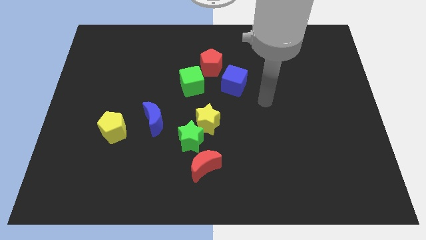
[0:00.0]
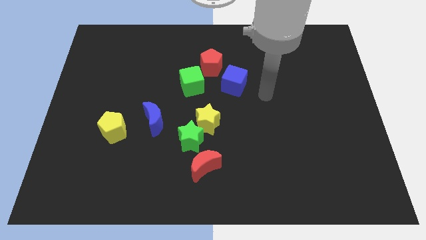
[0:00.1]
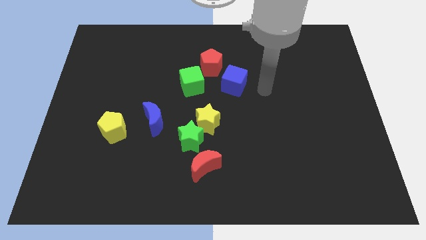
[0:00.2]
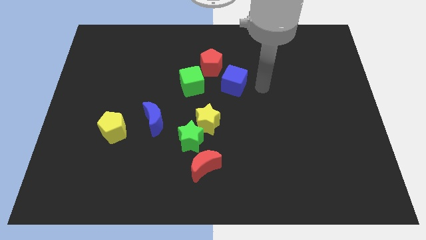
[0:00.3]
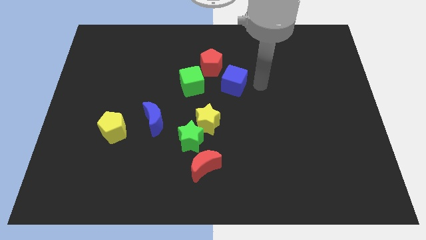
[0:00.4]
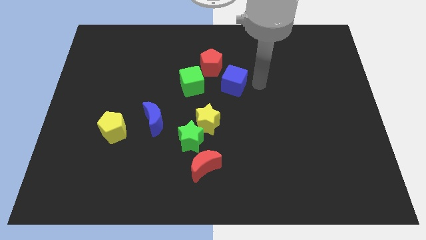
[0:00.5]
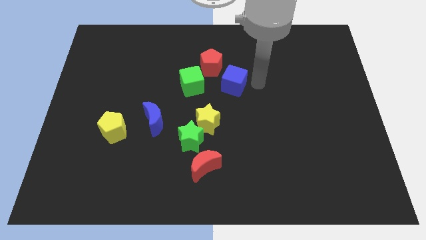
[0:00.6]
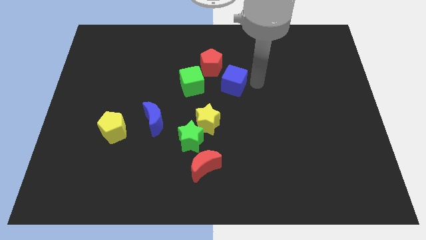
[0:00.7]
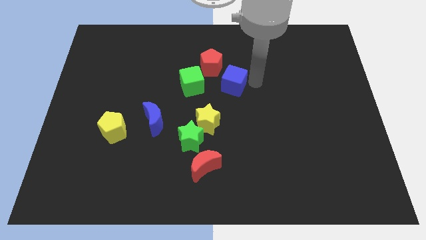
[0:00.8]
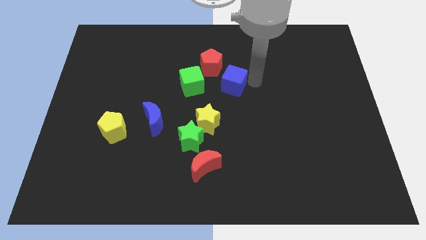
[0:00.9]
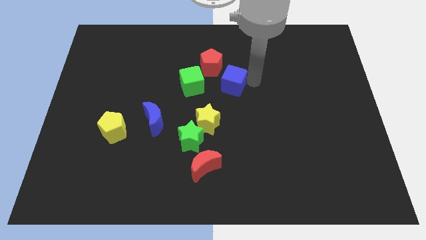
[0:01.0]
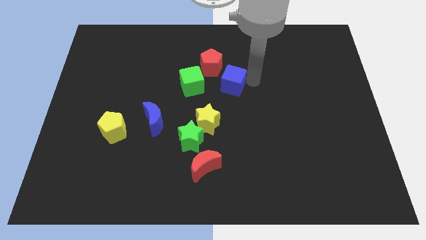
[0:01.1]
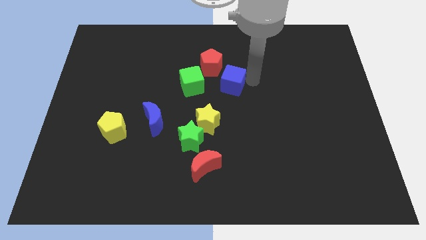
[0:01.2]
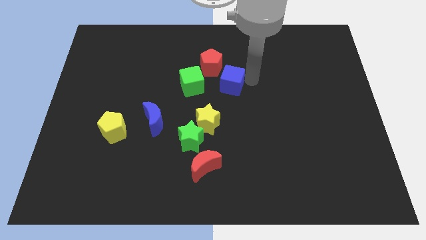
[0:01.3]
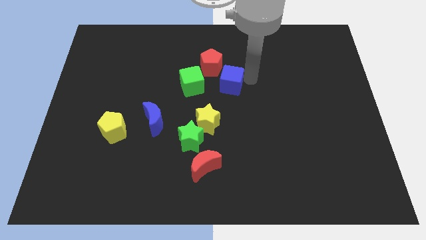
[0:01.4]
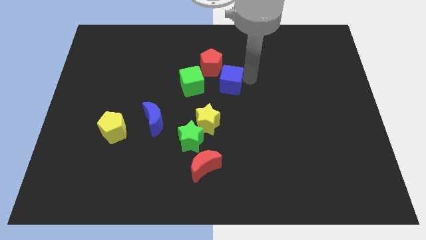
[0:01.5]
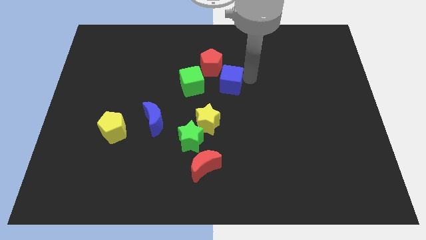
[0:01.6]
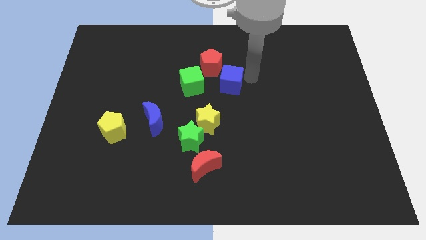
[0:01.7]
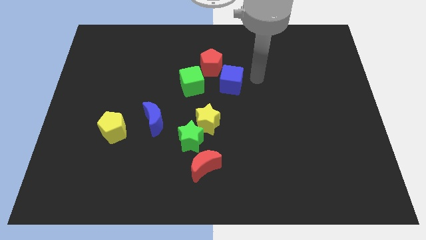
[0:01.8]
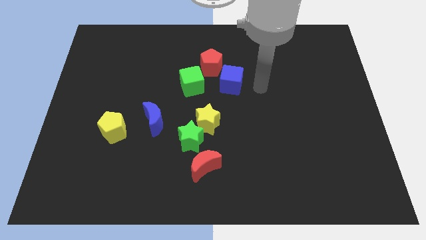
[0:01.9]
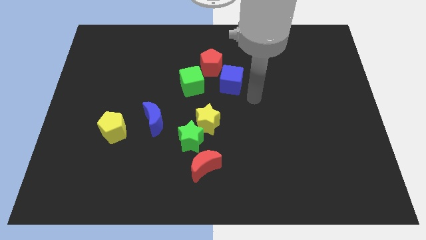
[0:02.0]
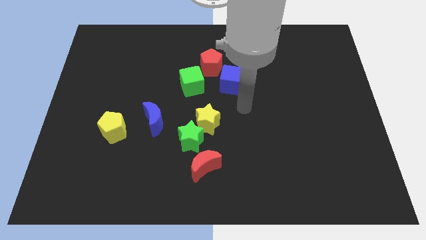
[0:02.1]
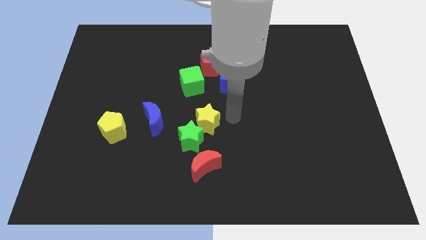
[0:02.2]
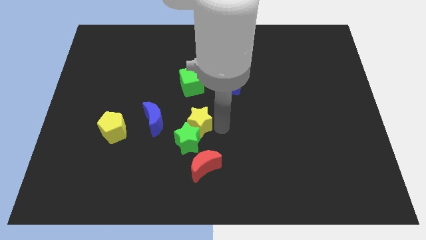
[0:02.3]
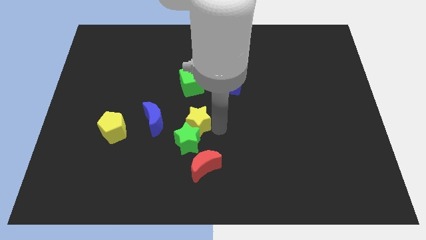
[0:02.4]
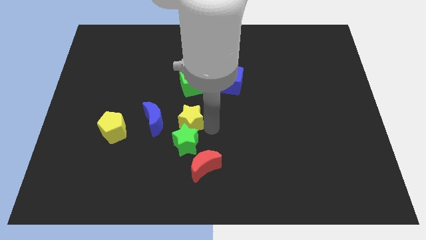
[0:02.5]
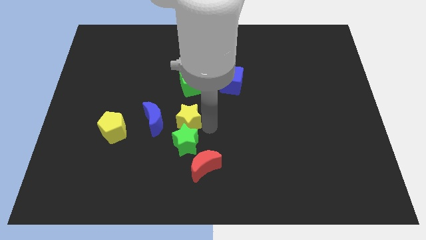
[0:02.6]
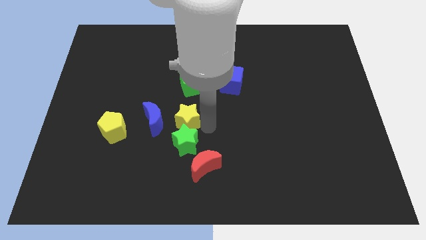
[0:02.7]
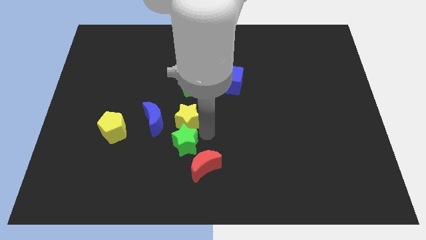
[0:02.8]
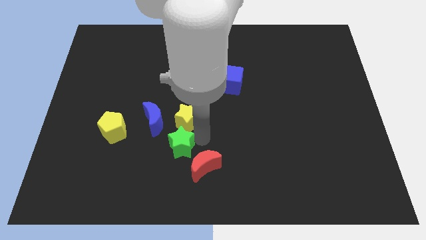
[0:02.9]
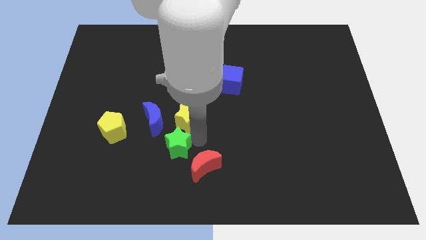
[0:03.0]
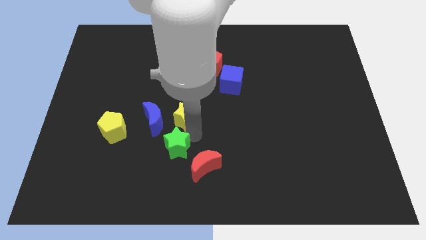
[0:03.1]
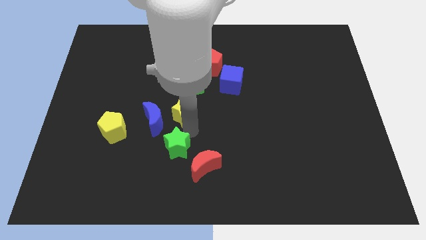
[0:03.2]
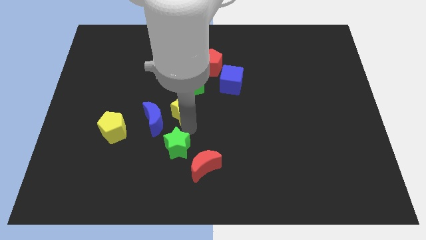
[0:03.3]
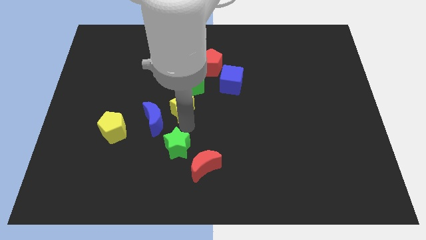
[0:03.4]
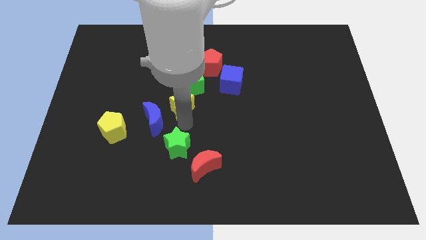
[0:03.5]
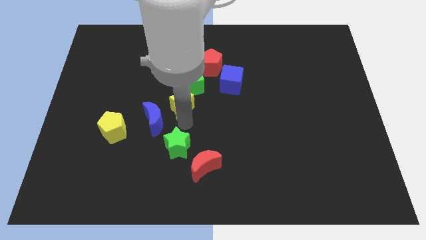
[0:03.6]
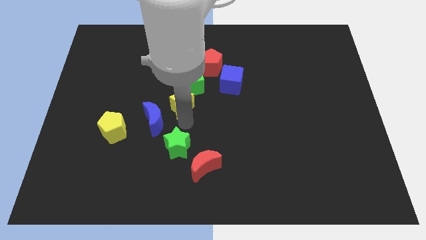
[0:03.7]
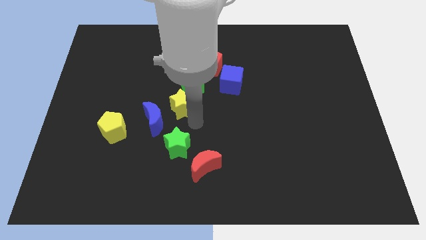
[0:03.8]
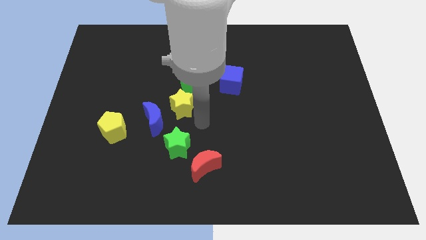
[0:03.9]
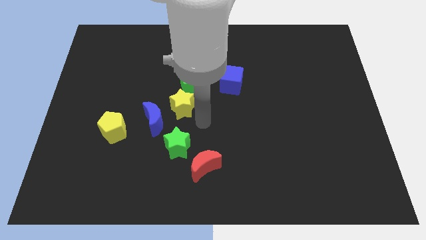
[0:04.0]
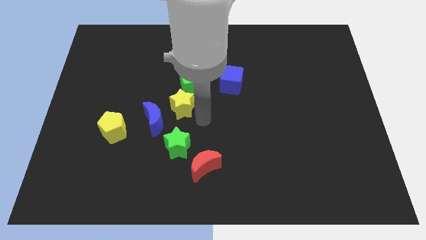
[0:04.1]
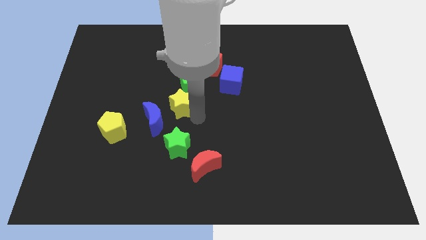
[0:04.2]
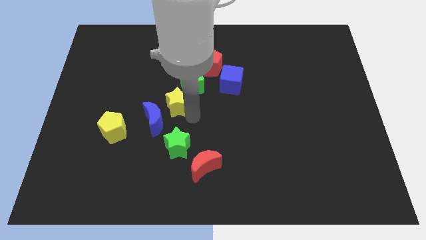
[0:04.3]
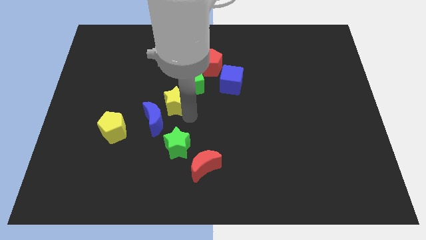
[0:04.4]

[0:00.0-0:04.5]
push the yellow star slightly upwards

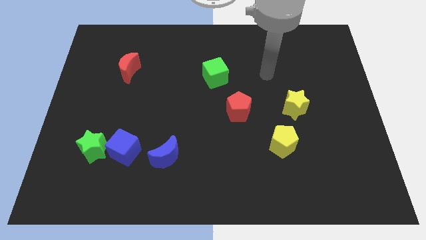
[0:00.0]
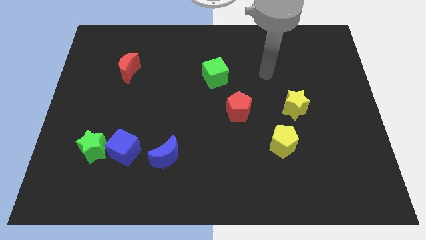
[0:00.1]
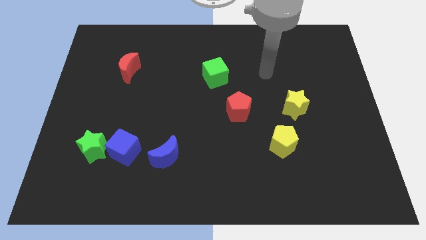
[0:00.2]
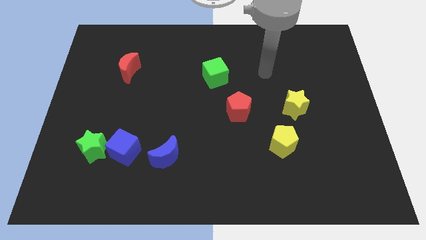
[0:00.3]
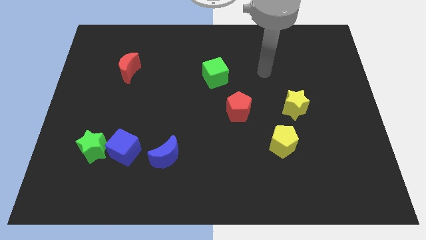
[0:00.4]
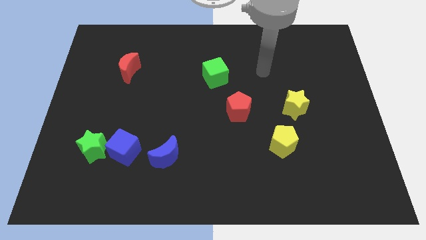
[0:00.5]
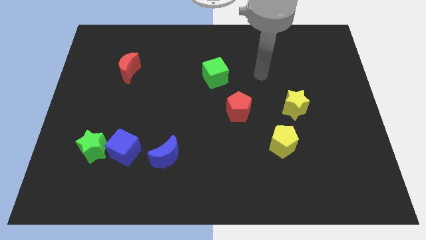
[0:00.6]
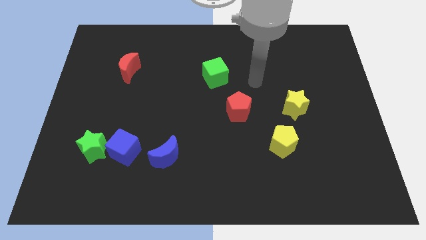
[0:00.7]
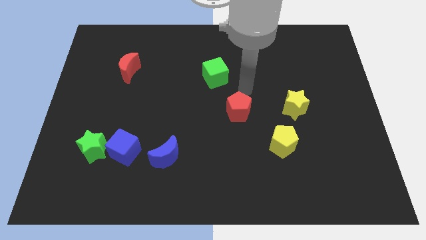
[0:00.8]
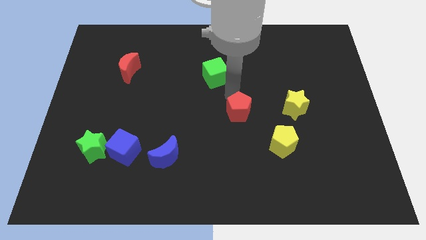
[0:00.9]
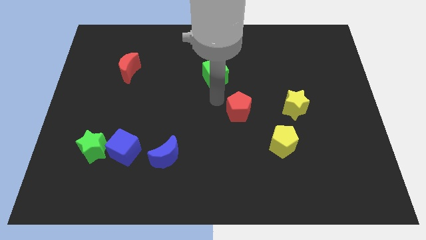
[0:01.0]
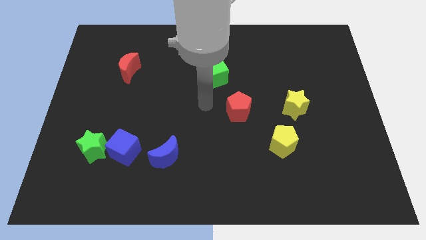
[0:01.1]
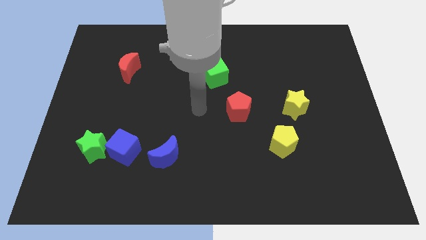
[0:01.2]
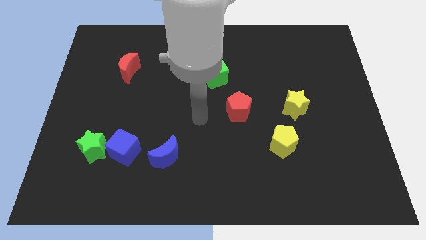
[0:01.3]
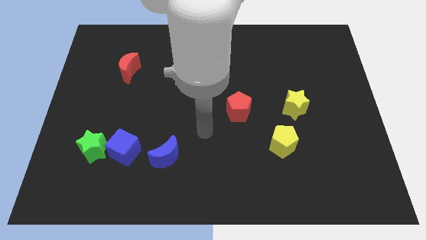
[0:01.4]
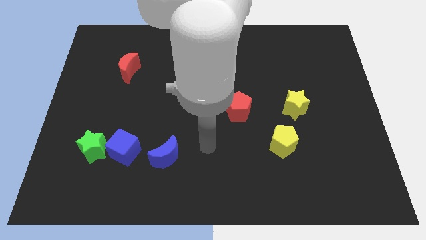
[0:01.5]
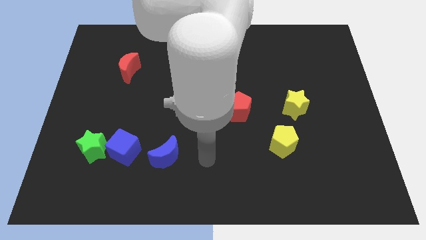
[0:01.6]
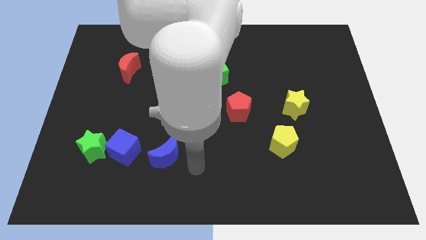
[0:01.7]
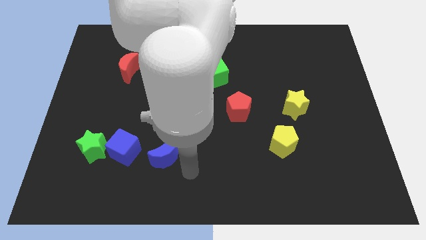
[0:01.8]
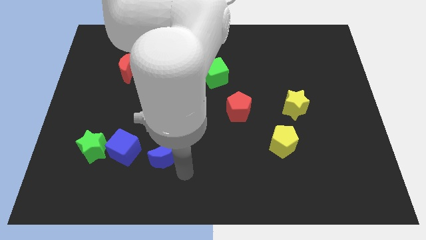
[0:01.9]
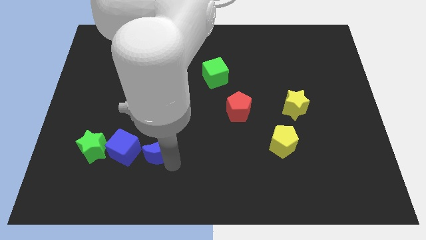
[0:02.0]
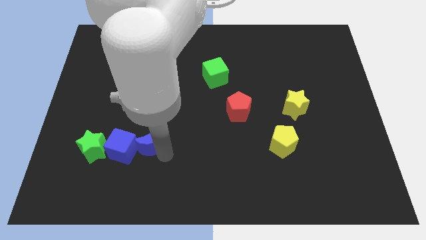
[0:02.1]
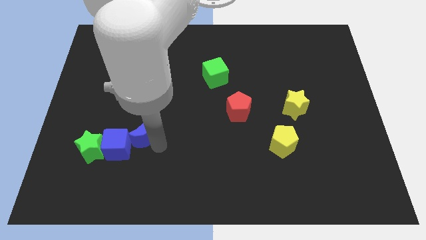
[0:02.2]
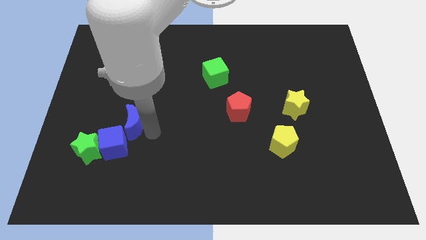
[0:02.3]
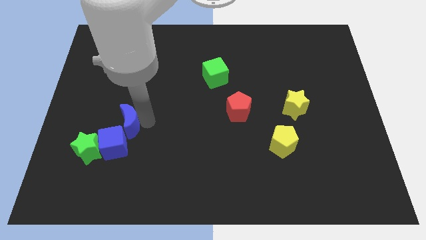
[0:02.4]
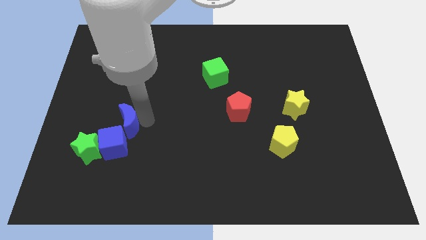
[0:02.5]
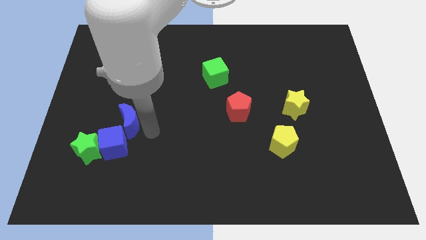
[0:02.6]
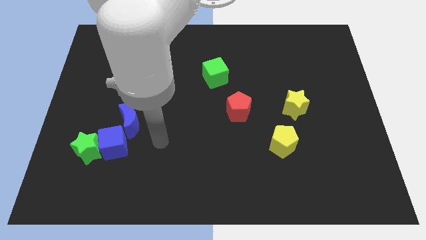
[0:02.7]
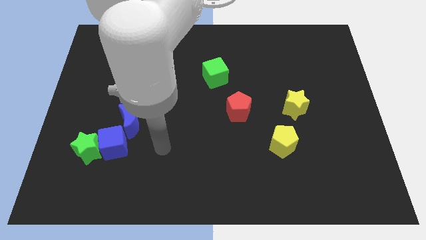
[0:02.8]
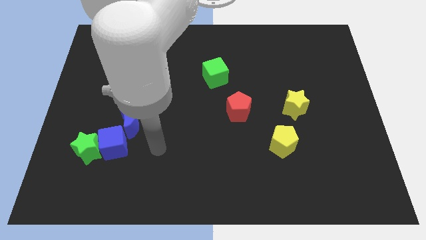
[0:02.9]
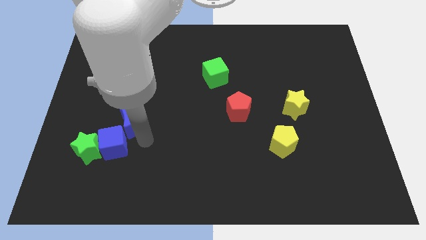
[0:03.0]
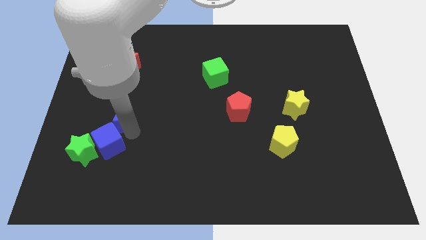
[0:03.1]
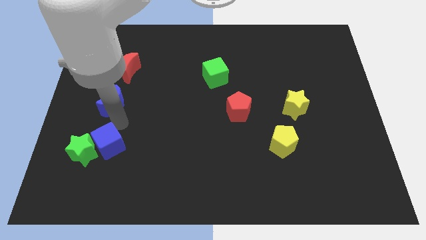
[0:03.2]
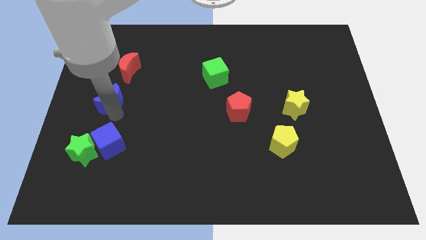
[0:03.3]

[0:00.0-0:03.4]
move the blue crescent to the top side of the blue cube

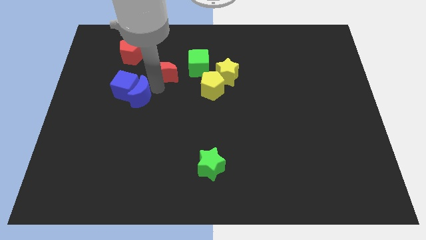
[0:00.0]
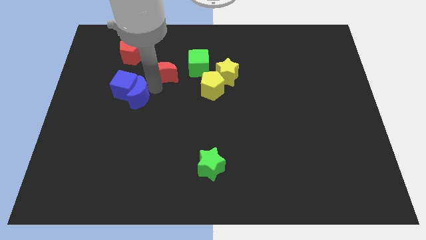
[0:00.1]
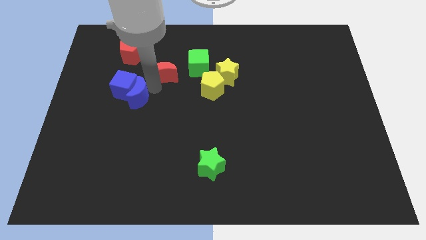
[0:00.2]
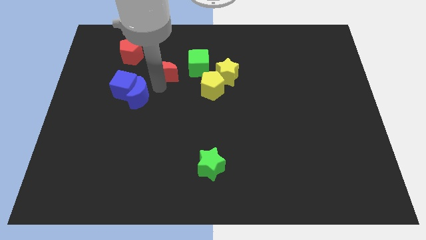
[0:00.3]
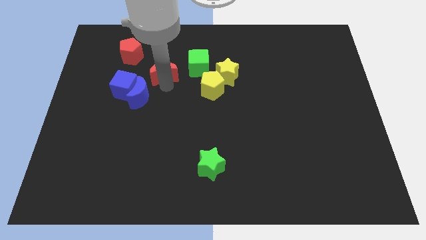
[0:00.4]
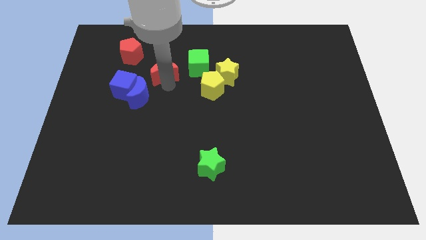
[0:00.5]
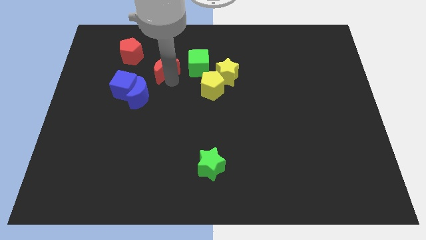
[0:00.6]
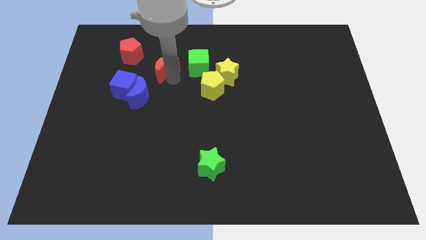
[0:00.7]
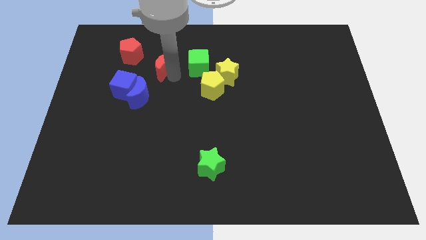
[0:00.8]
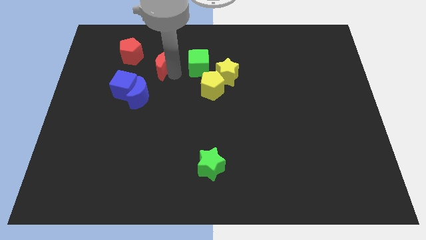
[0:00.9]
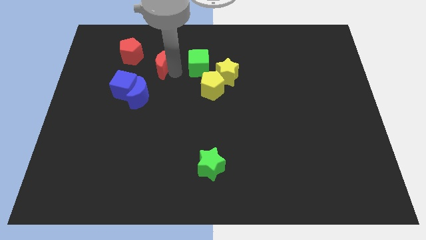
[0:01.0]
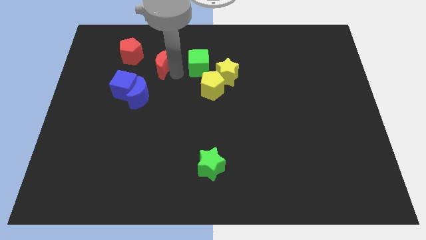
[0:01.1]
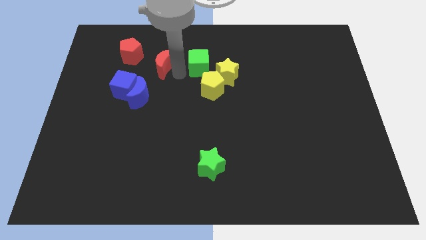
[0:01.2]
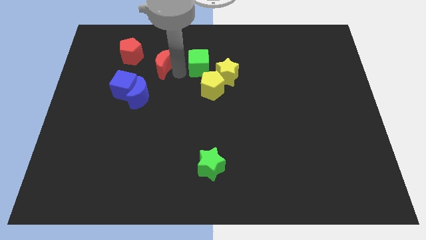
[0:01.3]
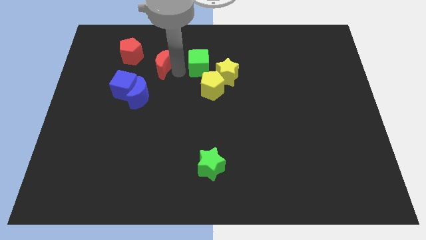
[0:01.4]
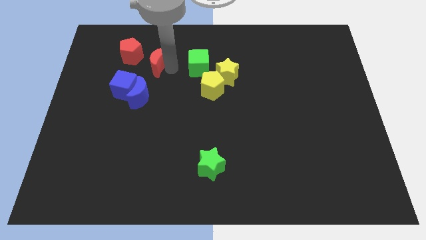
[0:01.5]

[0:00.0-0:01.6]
place the red moon to the left of the green cube
